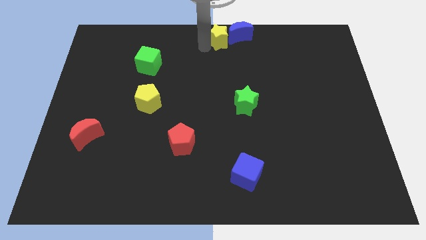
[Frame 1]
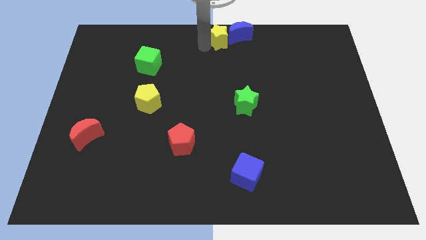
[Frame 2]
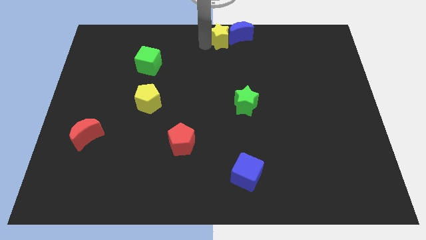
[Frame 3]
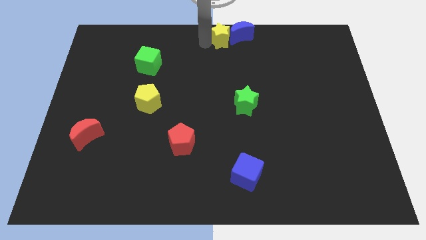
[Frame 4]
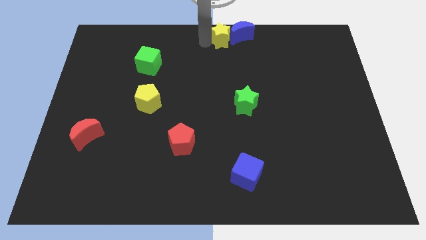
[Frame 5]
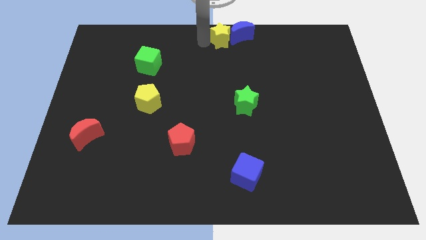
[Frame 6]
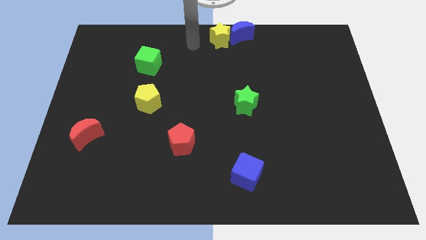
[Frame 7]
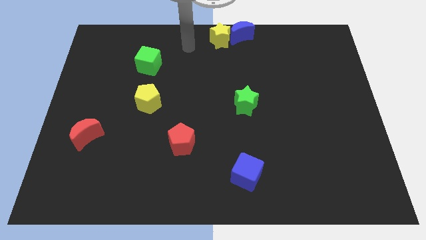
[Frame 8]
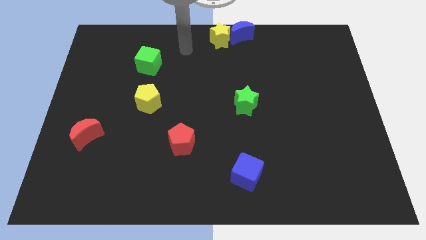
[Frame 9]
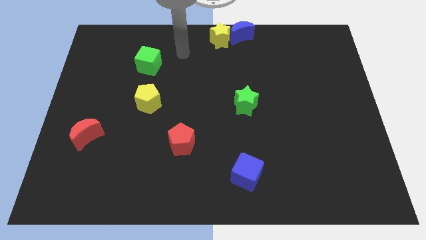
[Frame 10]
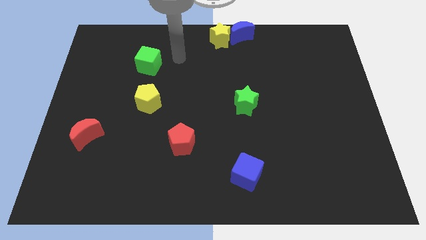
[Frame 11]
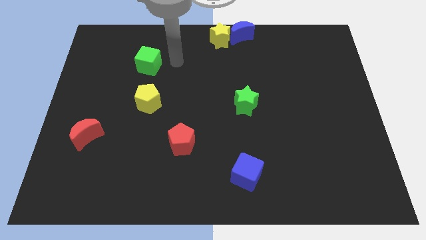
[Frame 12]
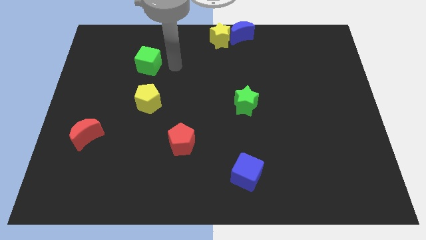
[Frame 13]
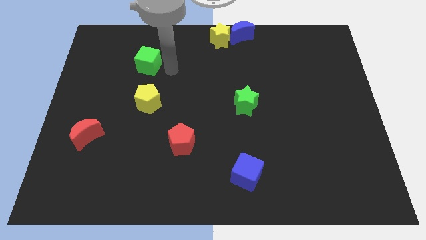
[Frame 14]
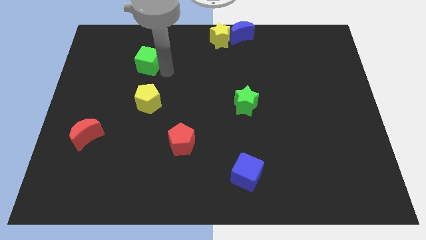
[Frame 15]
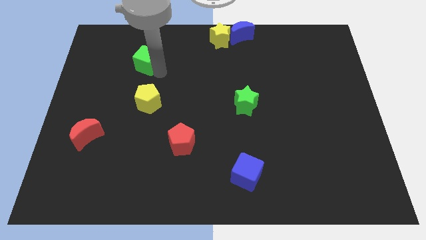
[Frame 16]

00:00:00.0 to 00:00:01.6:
move your arm away from yellow star

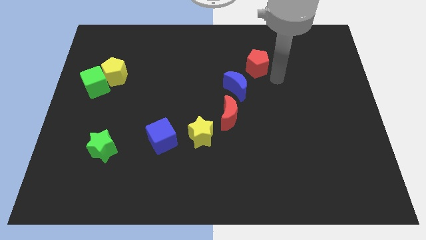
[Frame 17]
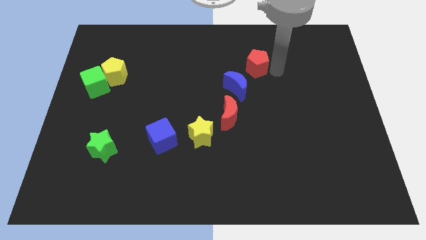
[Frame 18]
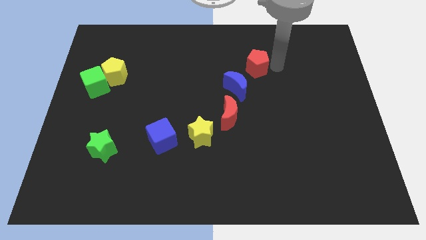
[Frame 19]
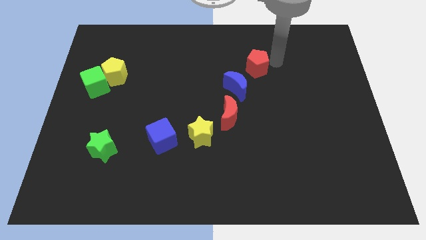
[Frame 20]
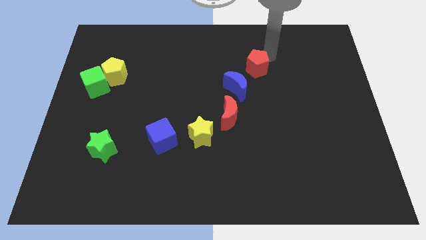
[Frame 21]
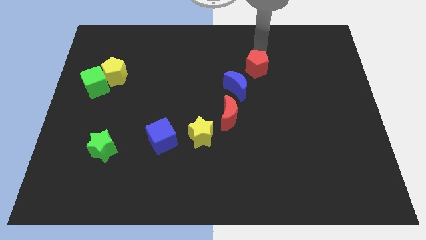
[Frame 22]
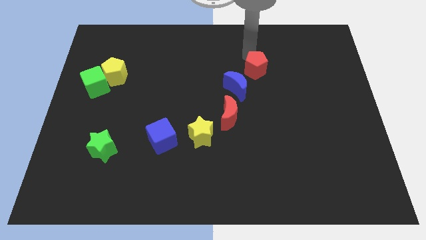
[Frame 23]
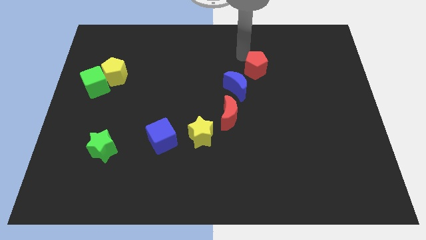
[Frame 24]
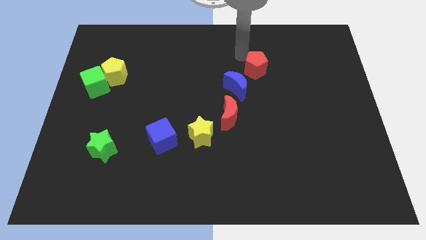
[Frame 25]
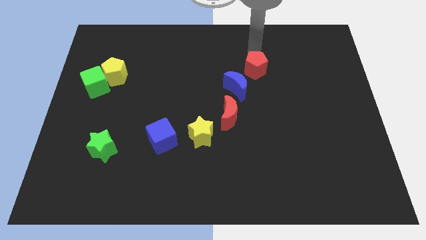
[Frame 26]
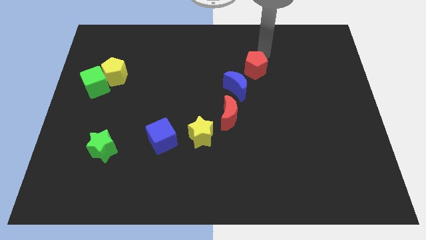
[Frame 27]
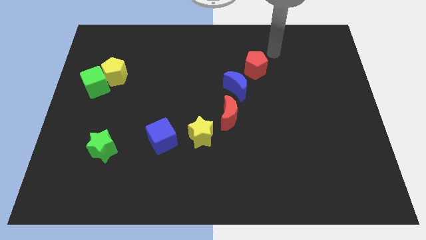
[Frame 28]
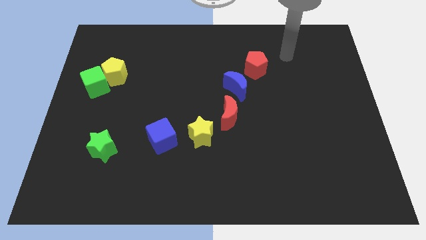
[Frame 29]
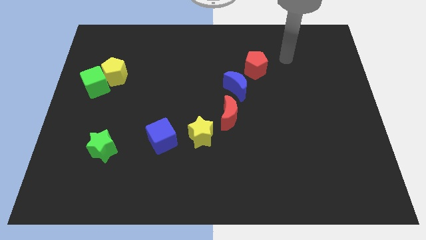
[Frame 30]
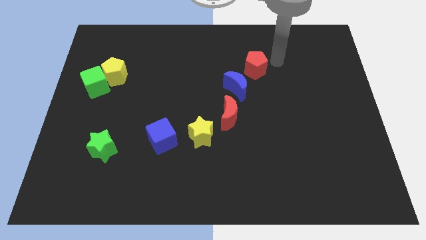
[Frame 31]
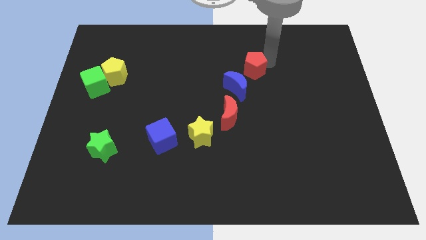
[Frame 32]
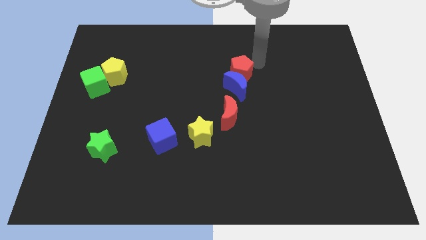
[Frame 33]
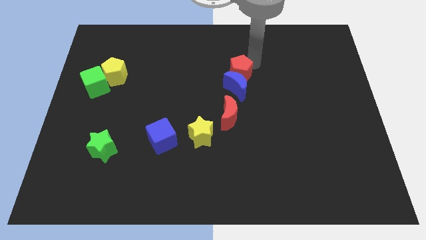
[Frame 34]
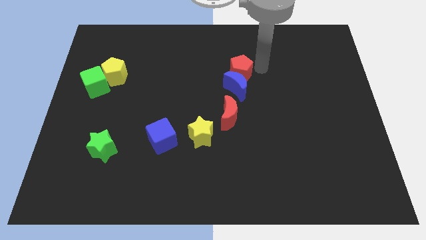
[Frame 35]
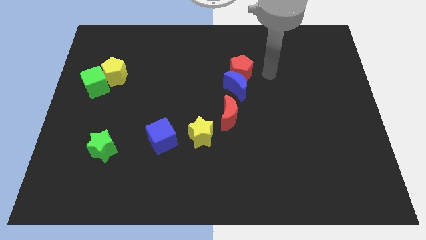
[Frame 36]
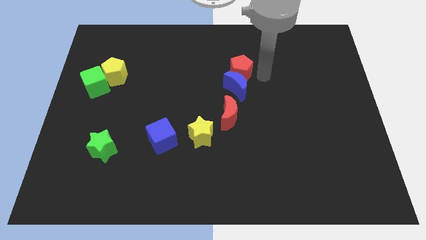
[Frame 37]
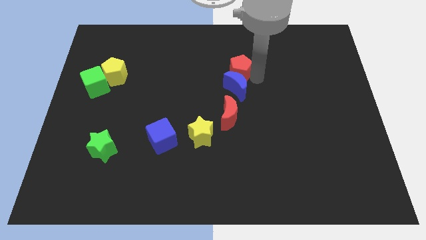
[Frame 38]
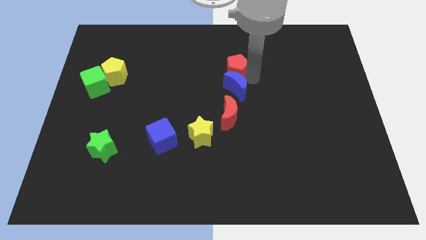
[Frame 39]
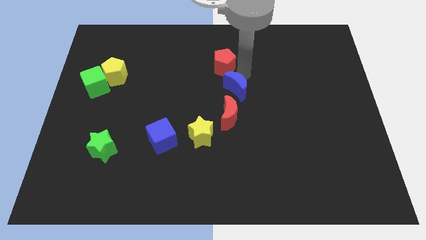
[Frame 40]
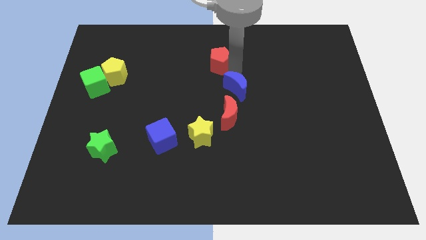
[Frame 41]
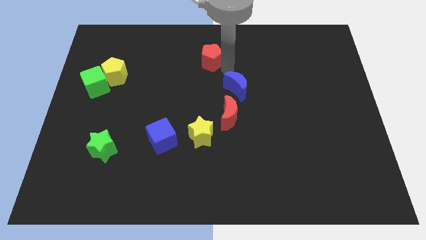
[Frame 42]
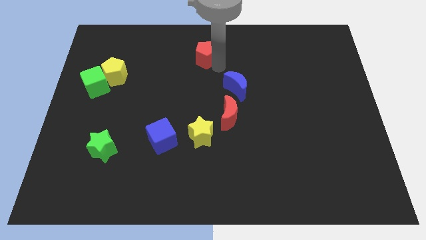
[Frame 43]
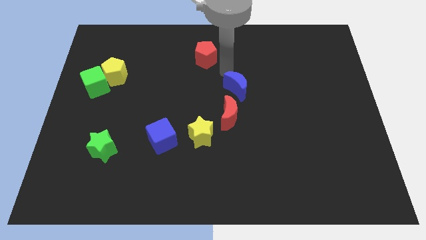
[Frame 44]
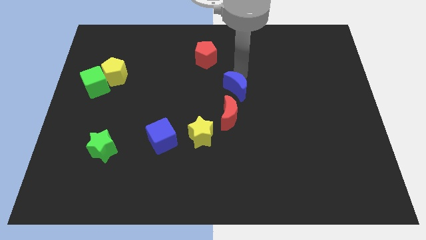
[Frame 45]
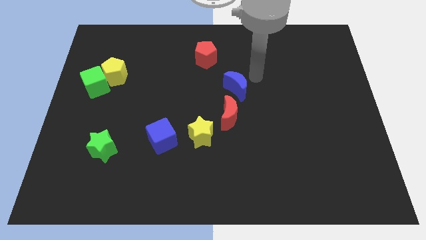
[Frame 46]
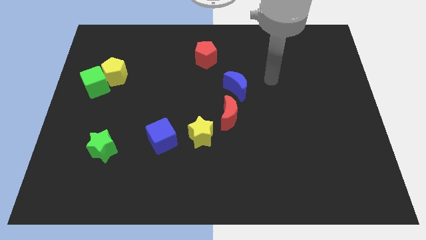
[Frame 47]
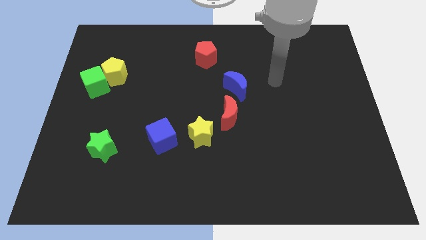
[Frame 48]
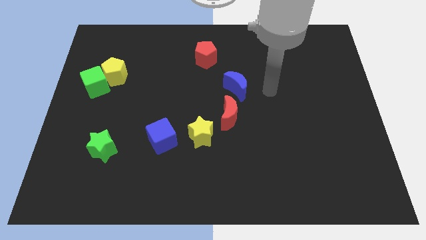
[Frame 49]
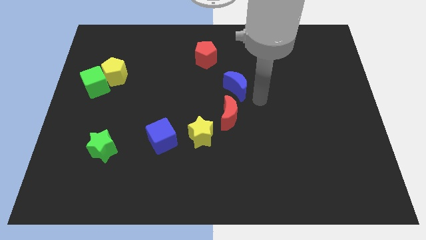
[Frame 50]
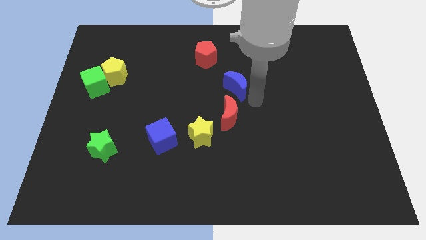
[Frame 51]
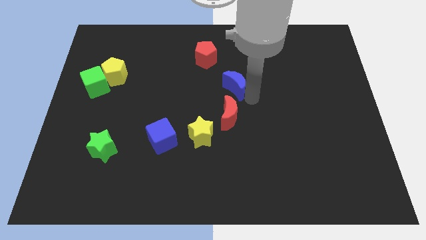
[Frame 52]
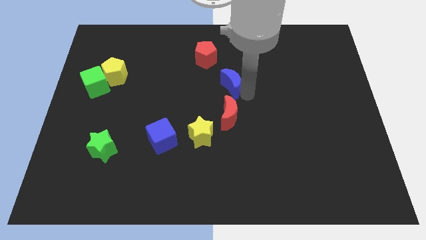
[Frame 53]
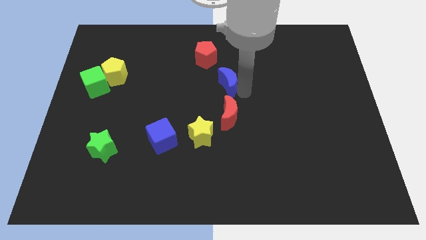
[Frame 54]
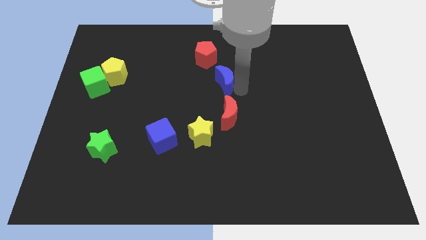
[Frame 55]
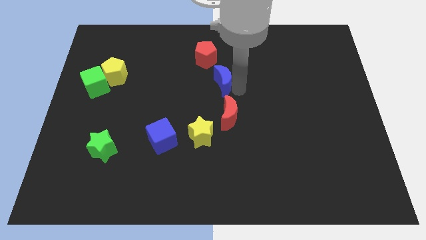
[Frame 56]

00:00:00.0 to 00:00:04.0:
move red pentagon slightly left

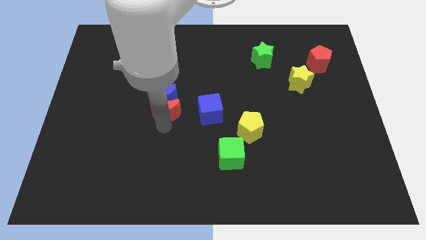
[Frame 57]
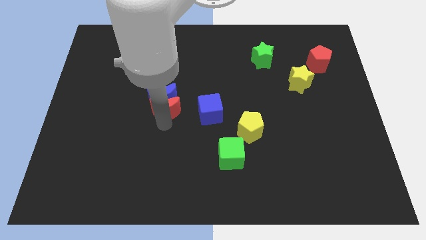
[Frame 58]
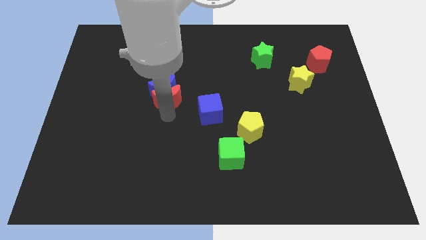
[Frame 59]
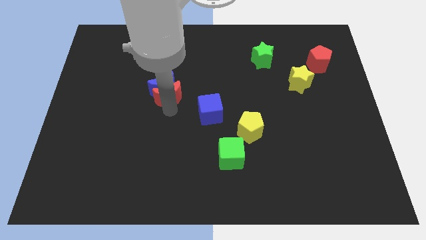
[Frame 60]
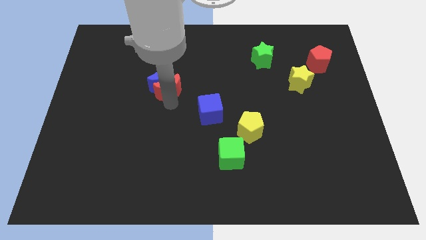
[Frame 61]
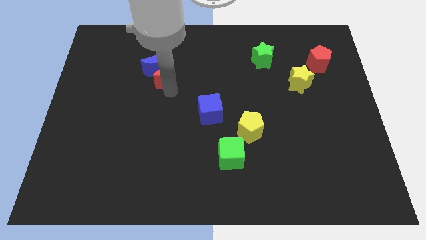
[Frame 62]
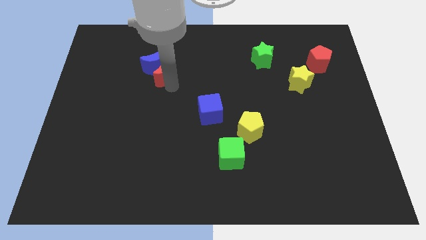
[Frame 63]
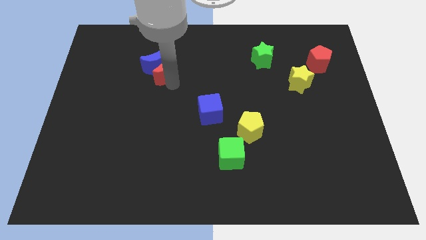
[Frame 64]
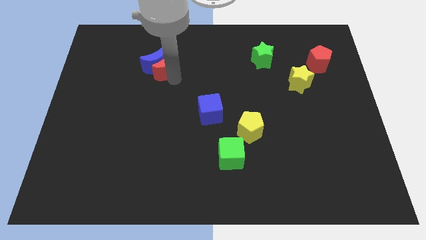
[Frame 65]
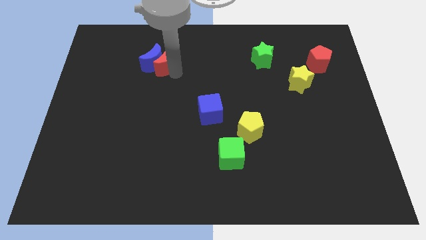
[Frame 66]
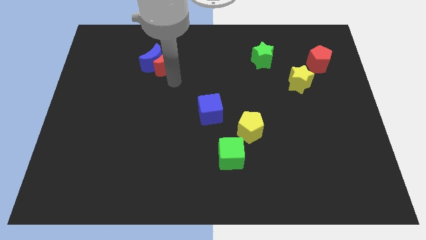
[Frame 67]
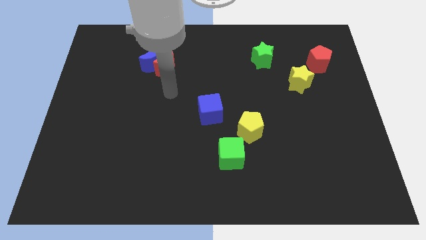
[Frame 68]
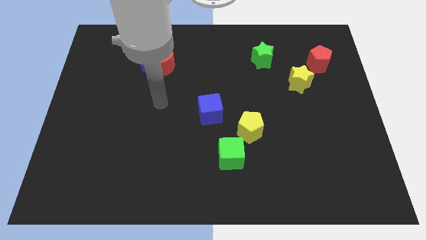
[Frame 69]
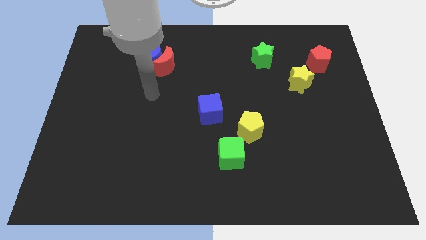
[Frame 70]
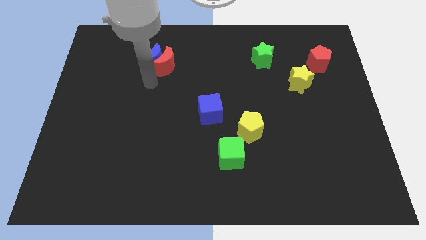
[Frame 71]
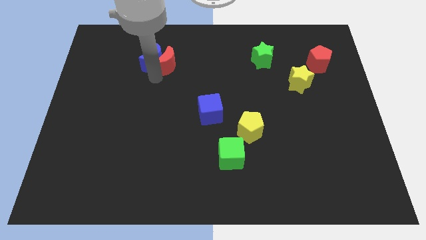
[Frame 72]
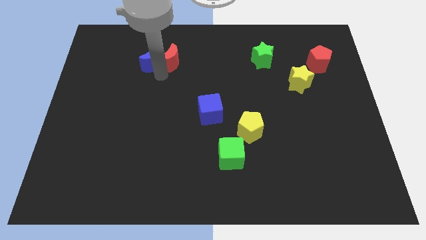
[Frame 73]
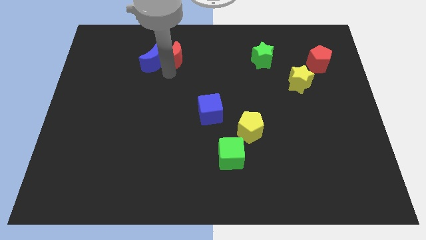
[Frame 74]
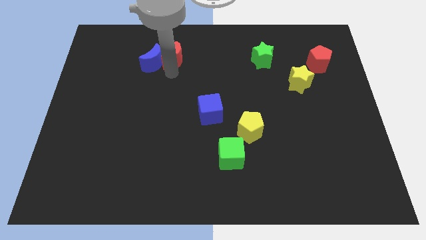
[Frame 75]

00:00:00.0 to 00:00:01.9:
push the red crescent and blue crescent towards the left top of the board

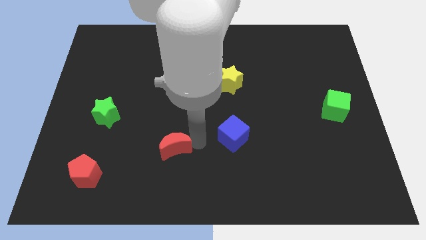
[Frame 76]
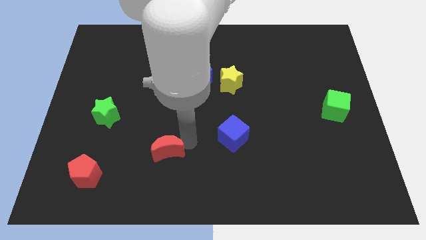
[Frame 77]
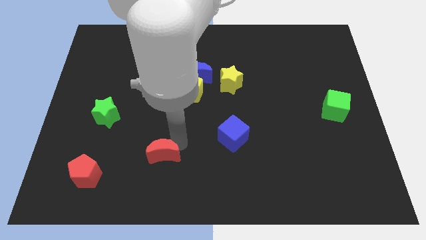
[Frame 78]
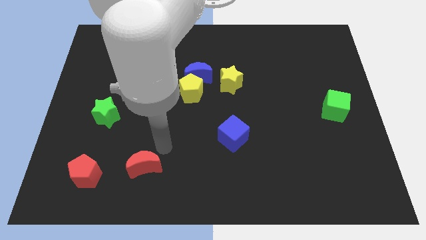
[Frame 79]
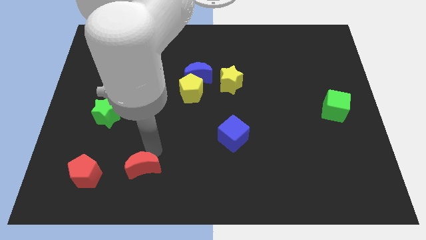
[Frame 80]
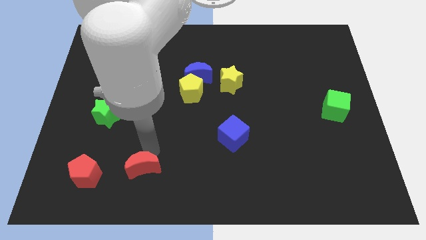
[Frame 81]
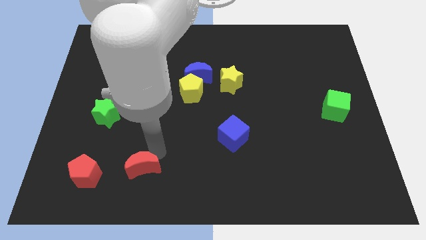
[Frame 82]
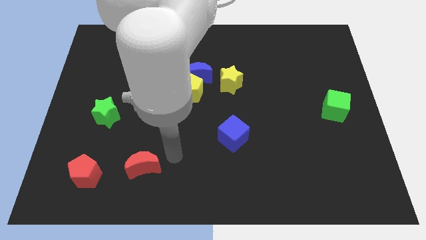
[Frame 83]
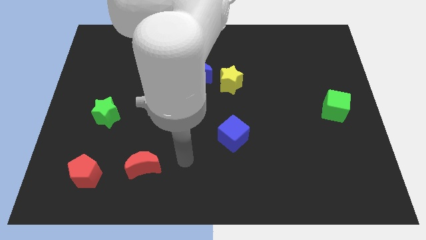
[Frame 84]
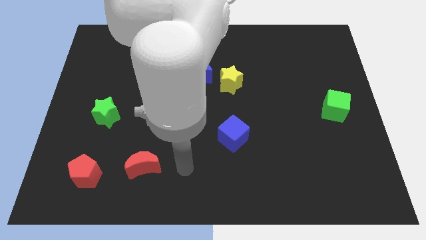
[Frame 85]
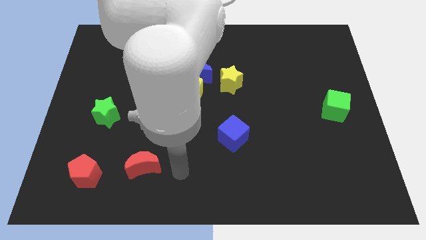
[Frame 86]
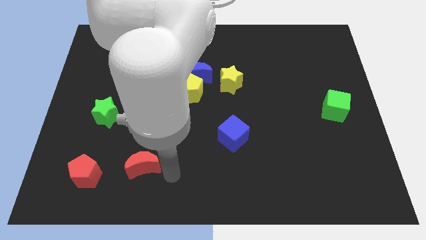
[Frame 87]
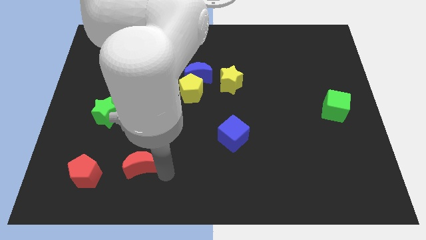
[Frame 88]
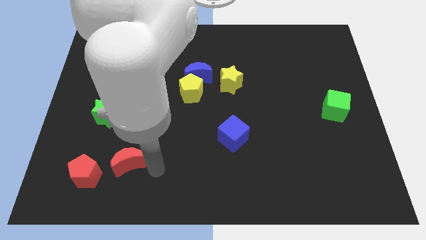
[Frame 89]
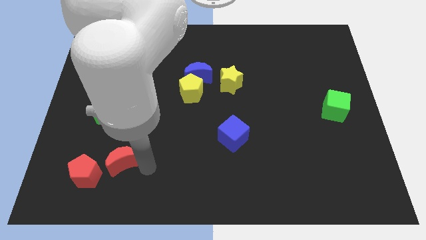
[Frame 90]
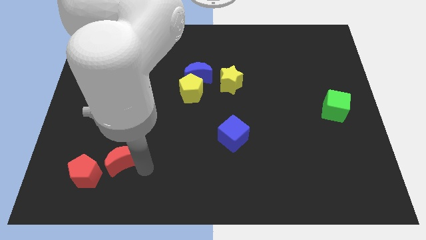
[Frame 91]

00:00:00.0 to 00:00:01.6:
place the red moon to the right of red pentagon
